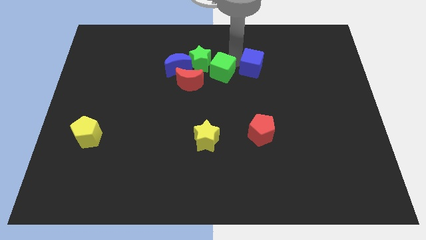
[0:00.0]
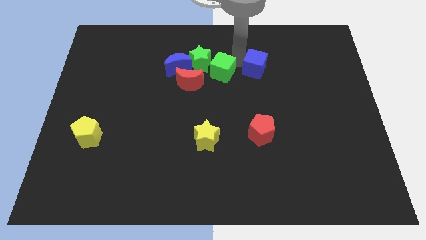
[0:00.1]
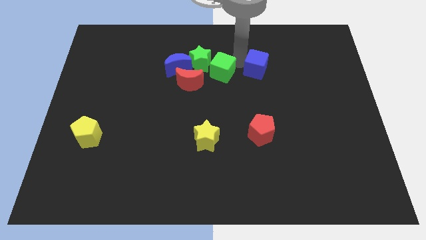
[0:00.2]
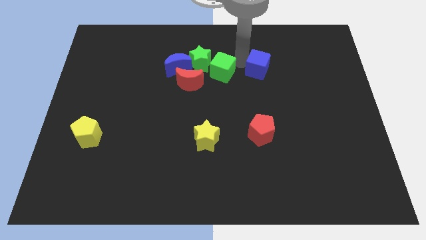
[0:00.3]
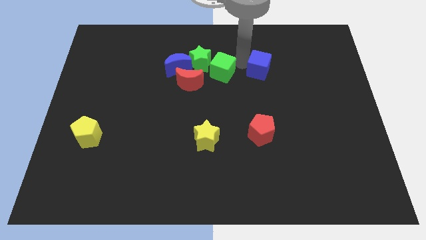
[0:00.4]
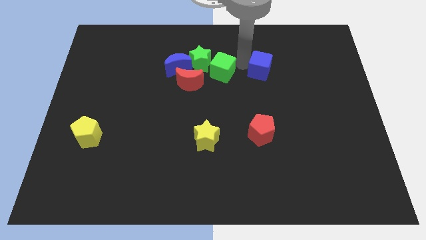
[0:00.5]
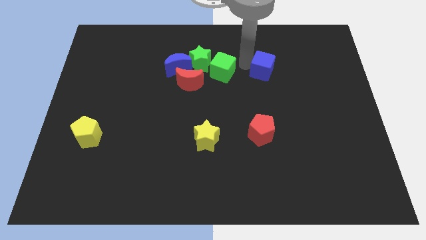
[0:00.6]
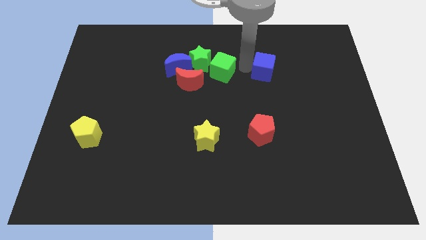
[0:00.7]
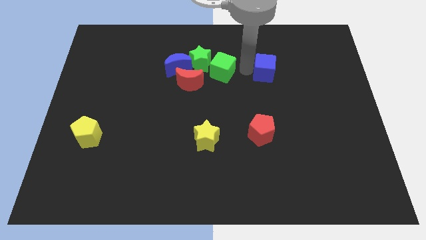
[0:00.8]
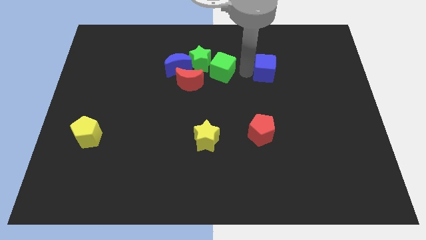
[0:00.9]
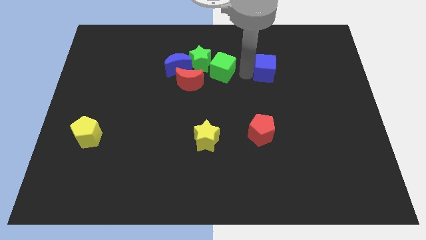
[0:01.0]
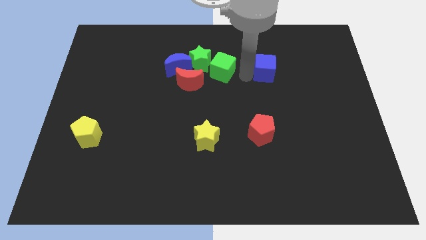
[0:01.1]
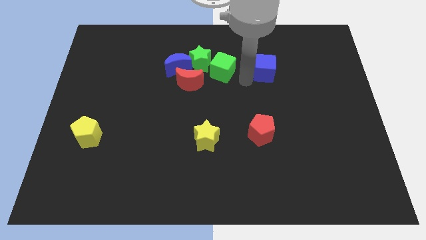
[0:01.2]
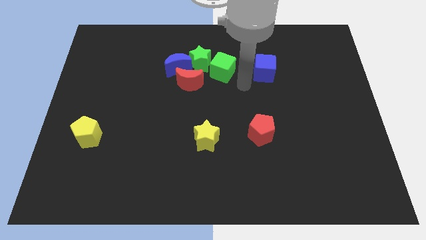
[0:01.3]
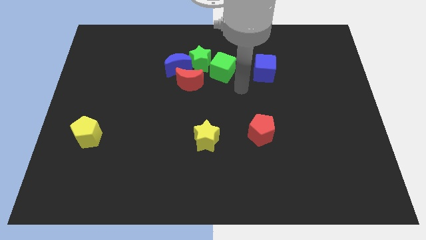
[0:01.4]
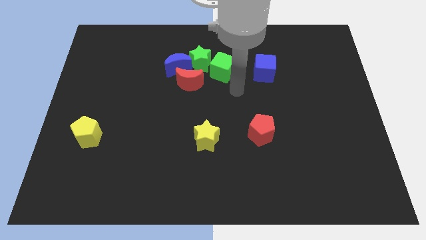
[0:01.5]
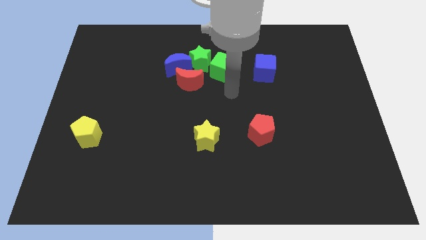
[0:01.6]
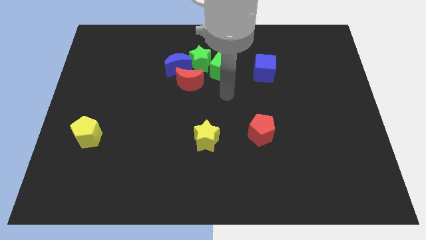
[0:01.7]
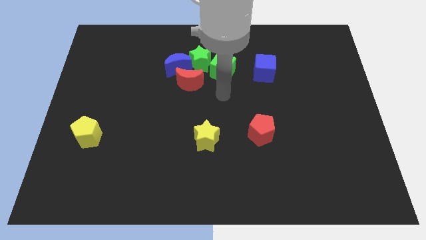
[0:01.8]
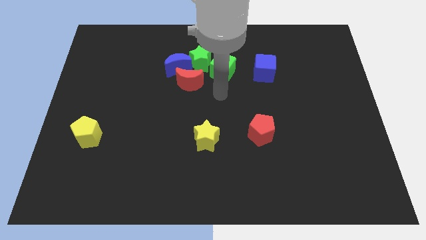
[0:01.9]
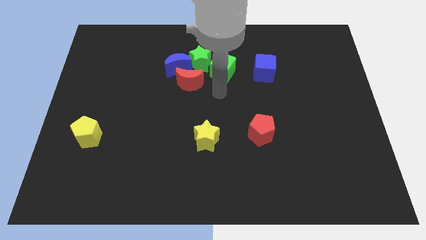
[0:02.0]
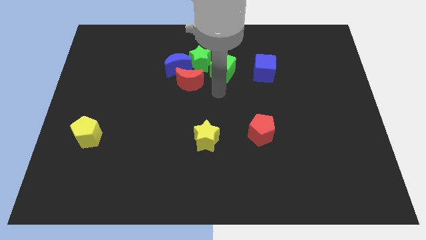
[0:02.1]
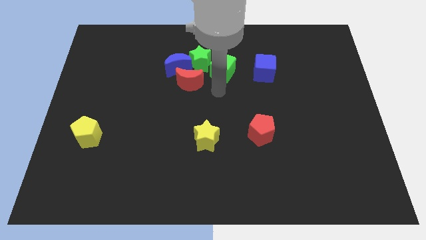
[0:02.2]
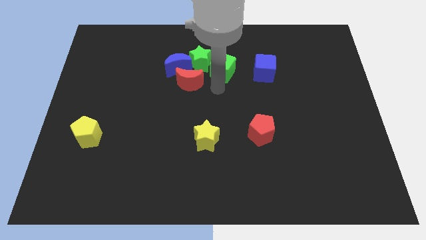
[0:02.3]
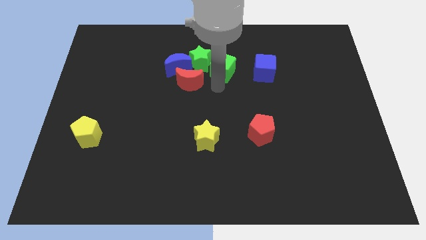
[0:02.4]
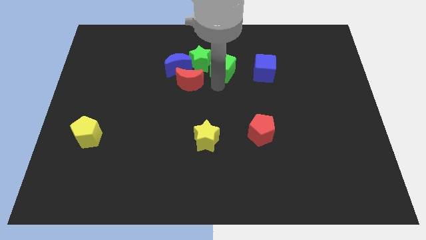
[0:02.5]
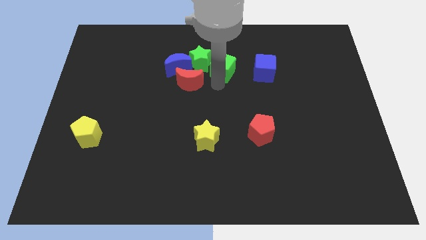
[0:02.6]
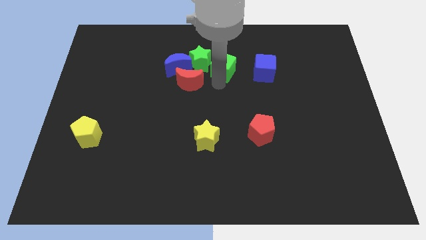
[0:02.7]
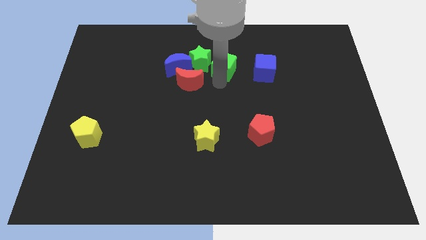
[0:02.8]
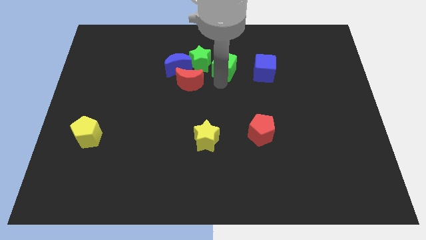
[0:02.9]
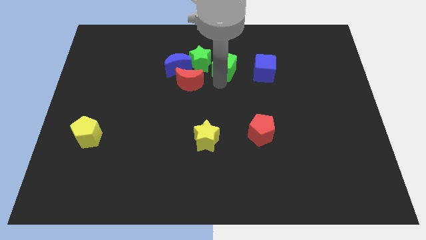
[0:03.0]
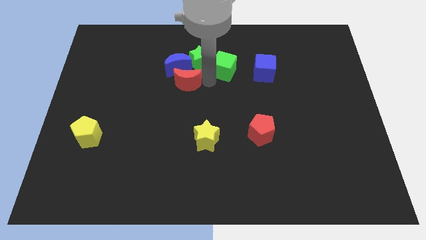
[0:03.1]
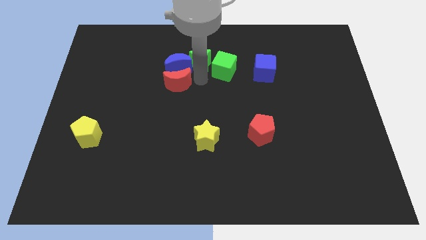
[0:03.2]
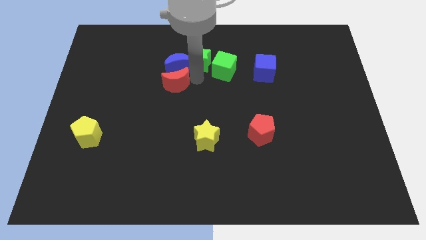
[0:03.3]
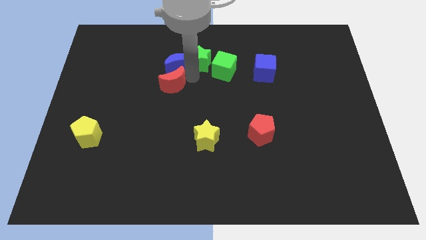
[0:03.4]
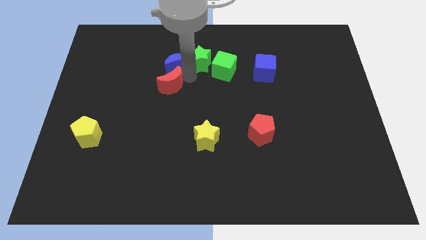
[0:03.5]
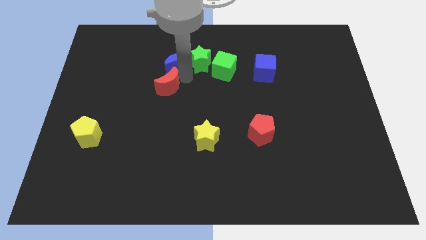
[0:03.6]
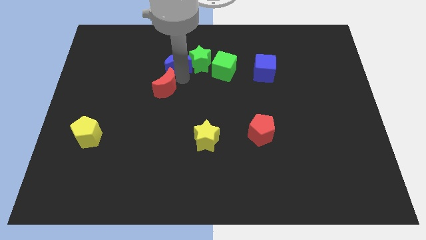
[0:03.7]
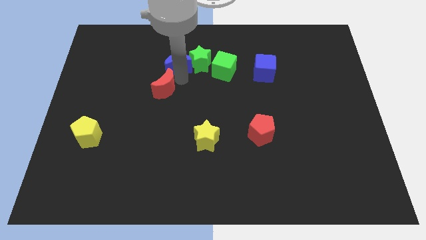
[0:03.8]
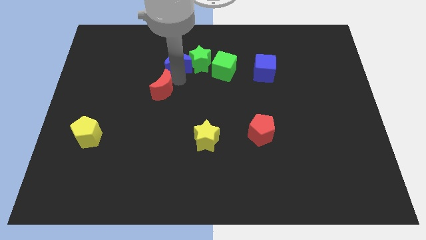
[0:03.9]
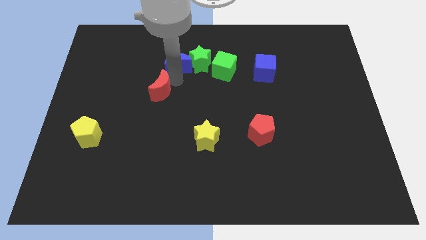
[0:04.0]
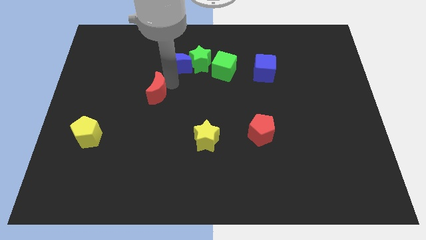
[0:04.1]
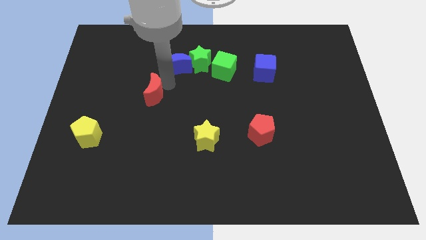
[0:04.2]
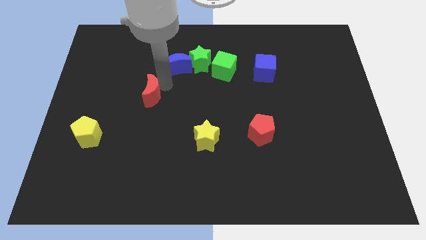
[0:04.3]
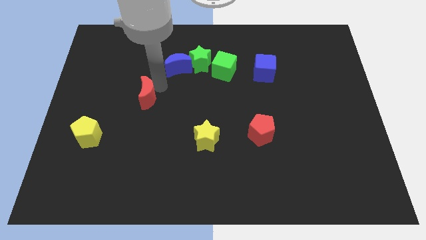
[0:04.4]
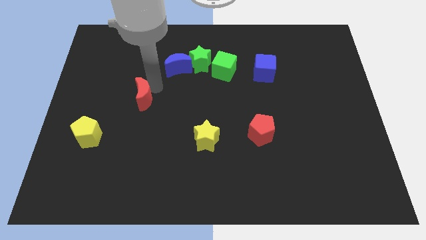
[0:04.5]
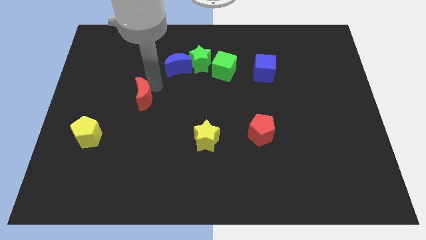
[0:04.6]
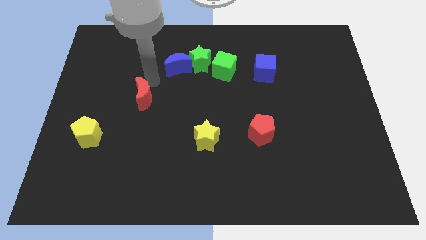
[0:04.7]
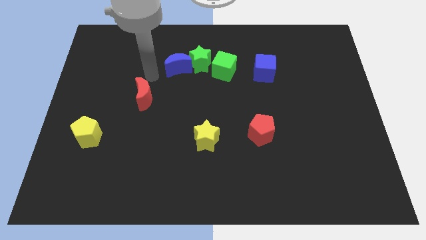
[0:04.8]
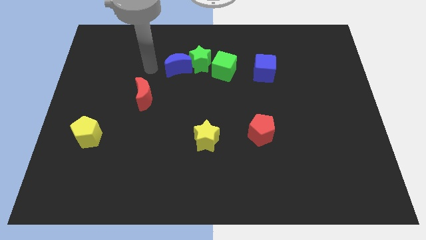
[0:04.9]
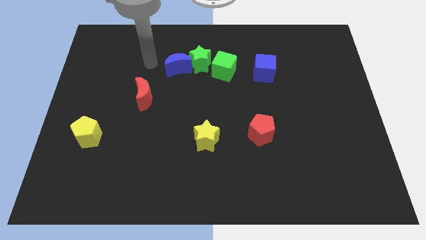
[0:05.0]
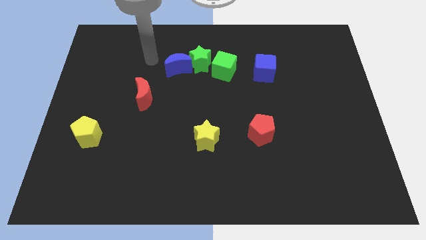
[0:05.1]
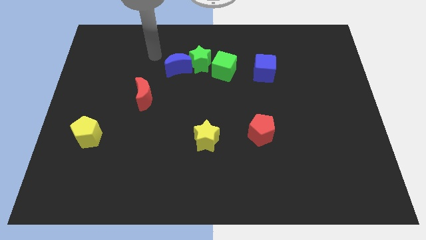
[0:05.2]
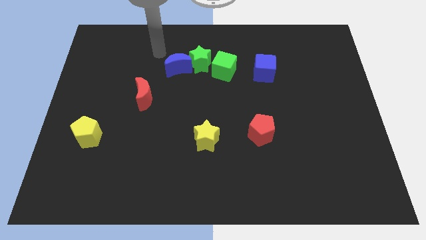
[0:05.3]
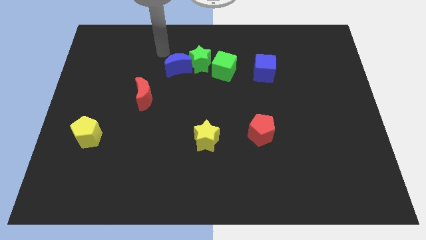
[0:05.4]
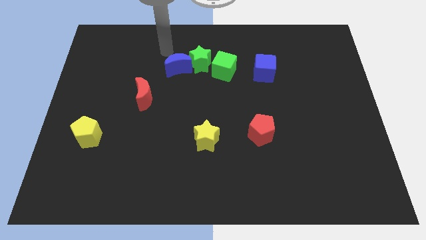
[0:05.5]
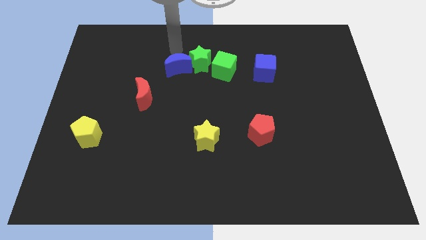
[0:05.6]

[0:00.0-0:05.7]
separate the blue cube and the red crescent from the group of blocks

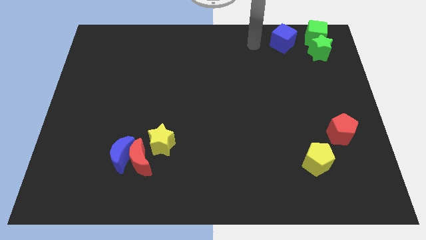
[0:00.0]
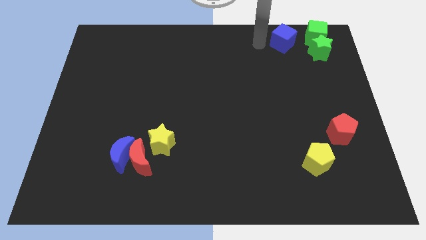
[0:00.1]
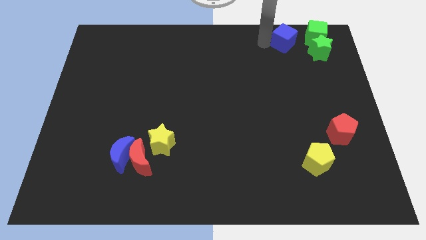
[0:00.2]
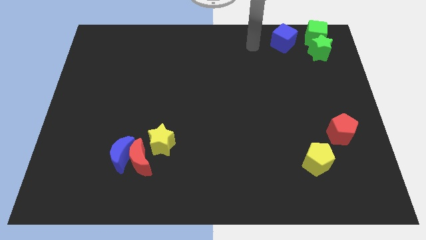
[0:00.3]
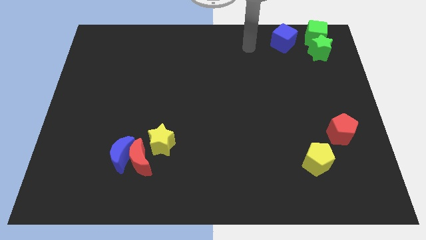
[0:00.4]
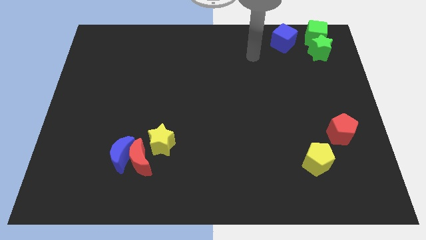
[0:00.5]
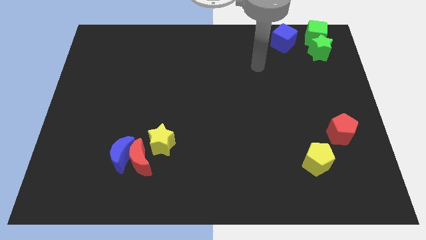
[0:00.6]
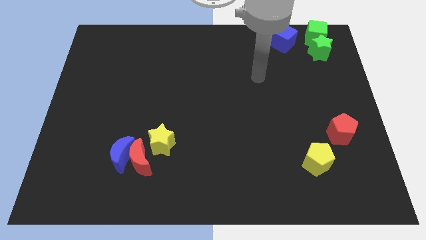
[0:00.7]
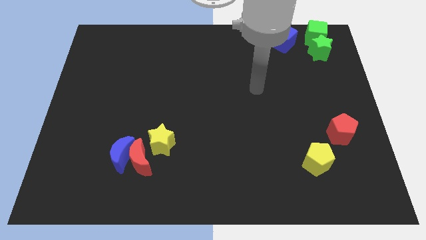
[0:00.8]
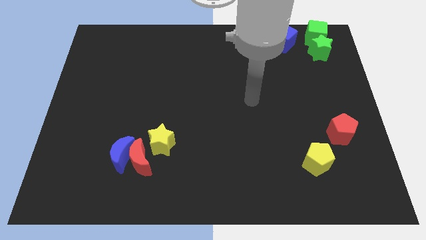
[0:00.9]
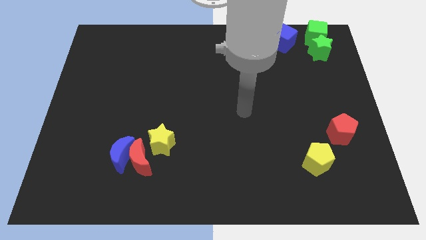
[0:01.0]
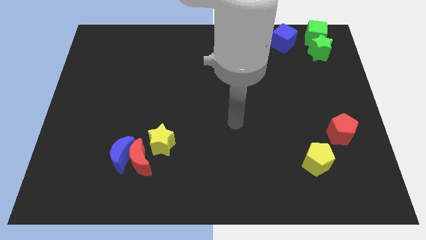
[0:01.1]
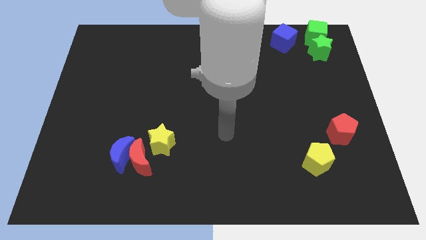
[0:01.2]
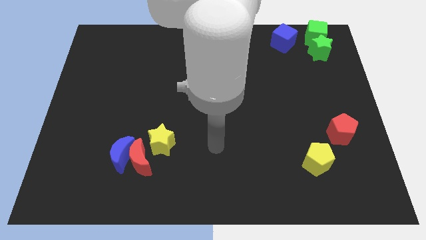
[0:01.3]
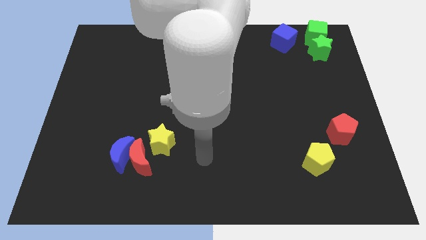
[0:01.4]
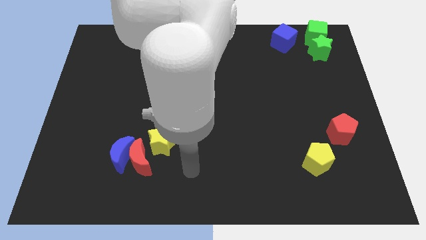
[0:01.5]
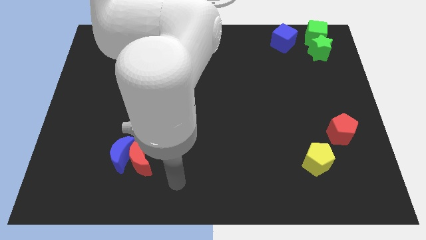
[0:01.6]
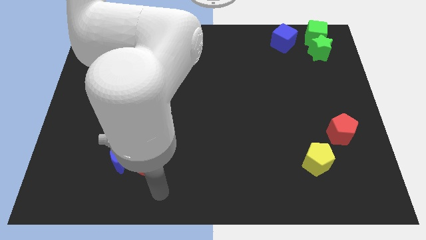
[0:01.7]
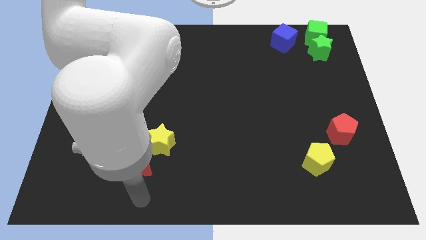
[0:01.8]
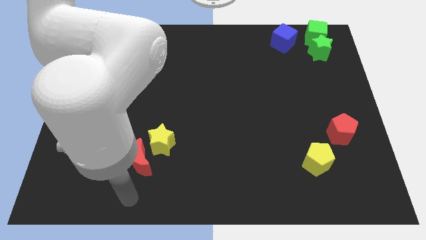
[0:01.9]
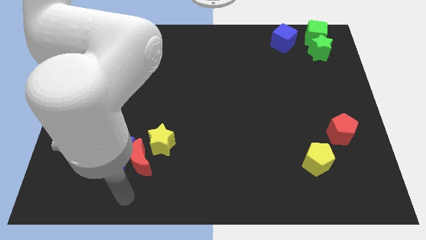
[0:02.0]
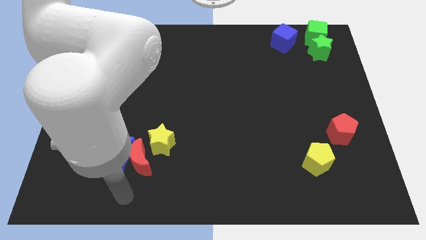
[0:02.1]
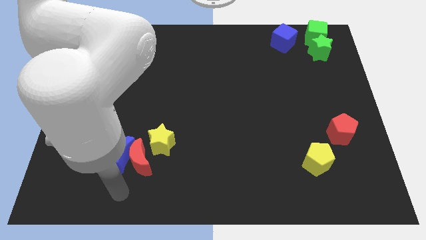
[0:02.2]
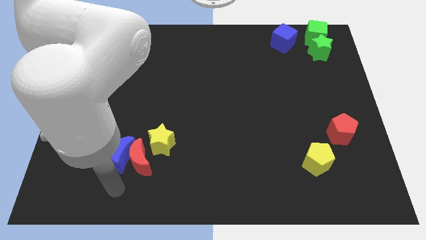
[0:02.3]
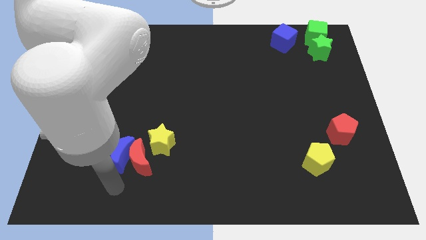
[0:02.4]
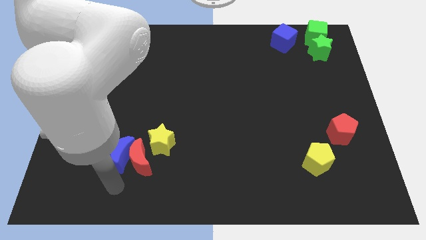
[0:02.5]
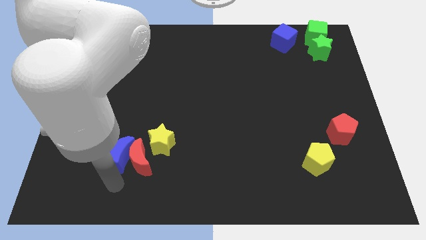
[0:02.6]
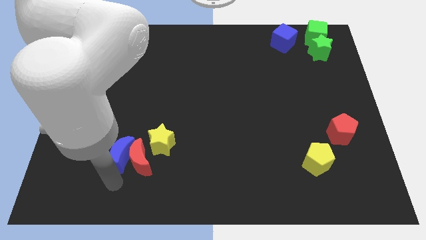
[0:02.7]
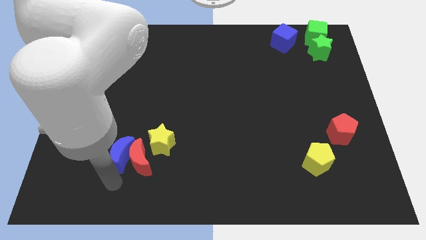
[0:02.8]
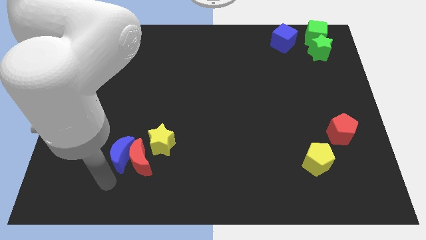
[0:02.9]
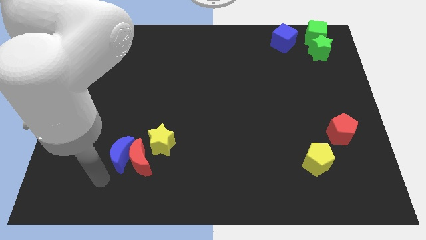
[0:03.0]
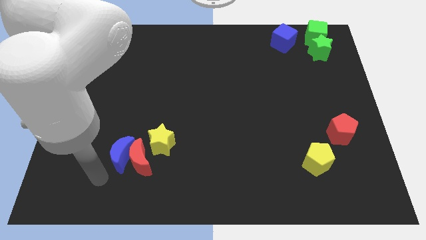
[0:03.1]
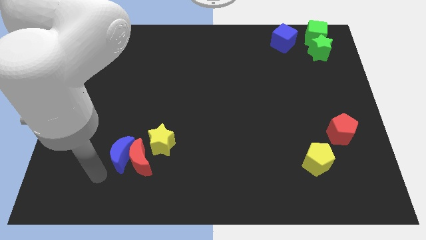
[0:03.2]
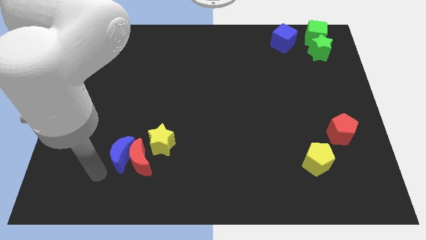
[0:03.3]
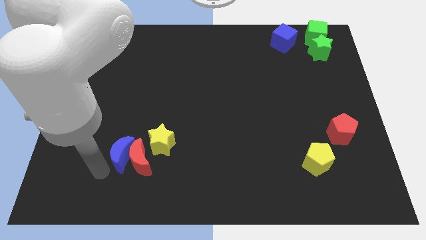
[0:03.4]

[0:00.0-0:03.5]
put your arm away from the blue cube
